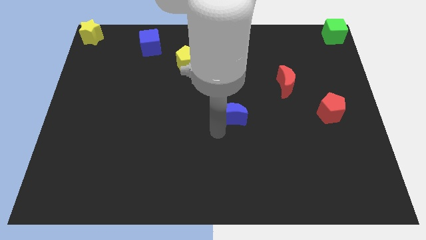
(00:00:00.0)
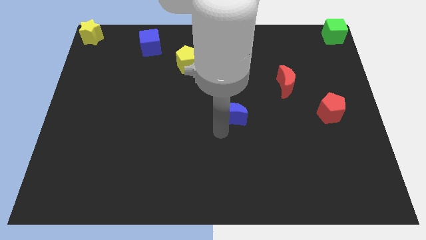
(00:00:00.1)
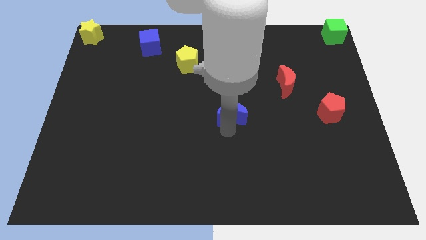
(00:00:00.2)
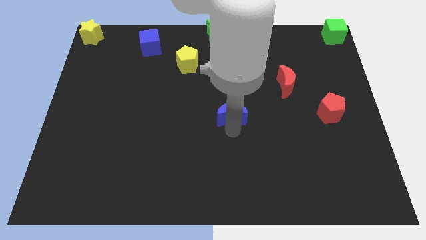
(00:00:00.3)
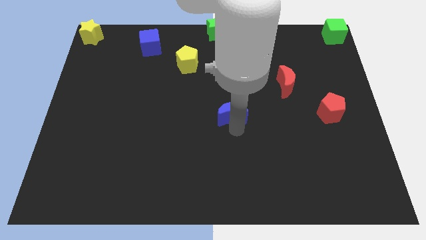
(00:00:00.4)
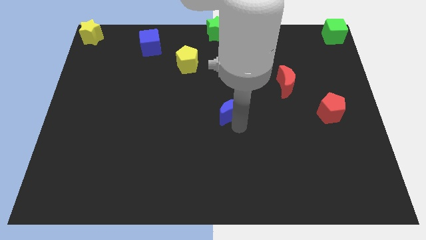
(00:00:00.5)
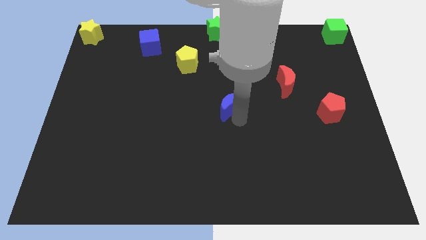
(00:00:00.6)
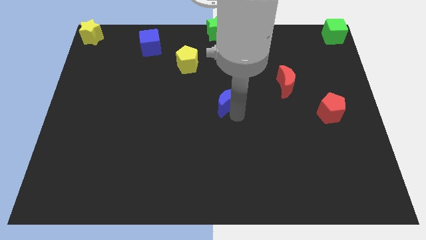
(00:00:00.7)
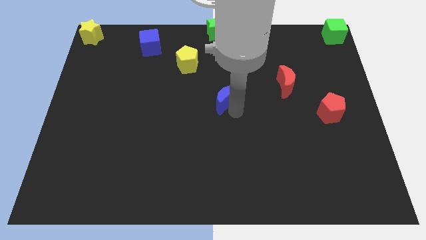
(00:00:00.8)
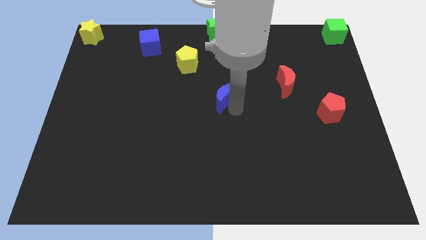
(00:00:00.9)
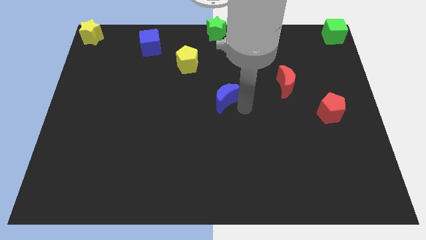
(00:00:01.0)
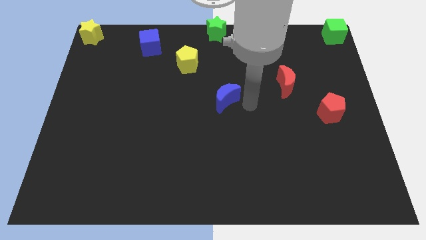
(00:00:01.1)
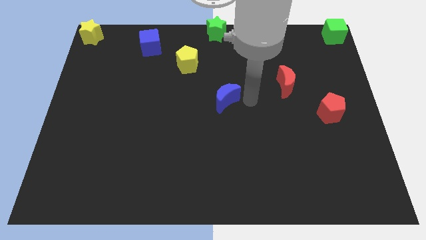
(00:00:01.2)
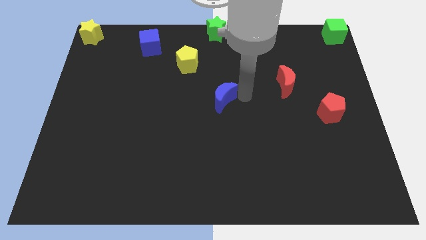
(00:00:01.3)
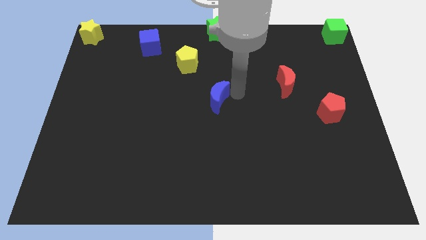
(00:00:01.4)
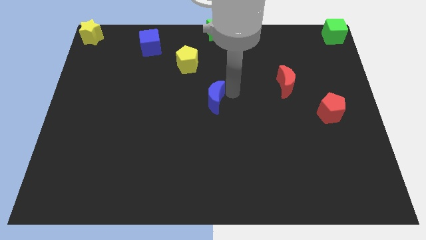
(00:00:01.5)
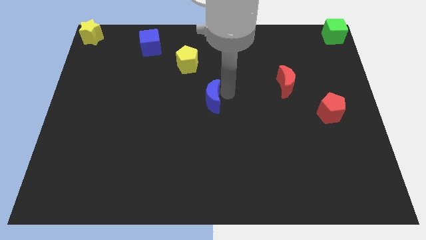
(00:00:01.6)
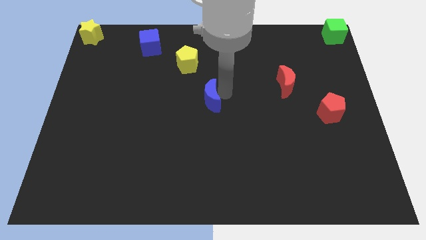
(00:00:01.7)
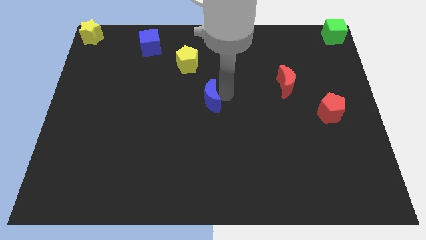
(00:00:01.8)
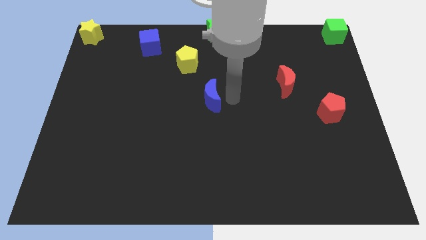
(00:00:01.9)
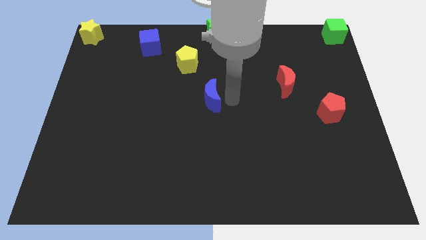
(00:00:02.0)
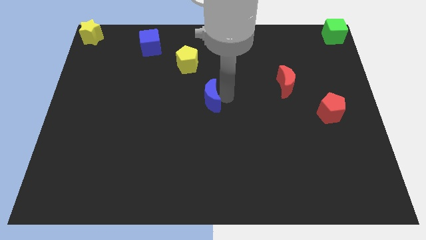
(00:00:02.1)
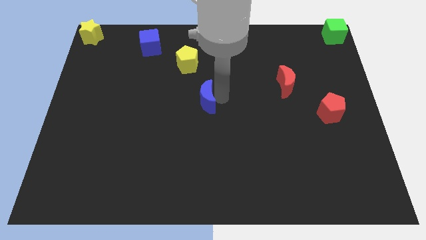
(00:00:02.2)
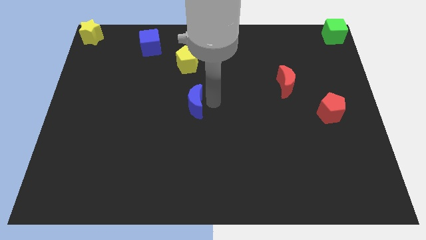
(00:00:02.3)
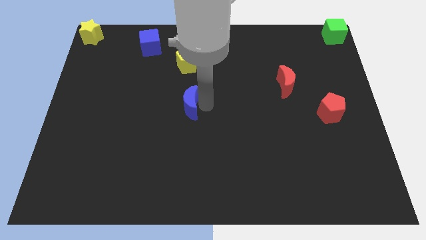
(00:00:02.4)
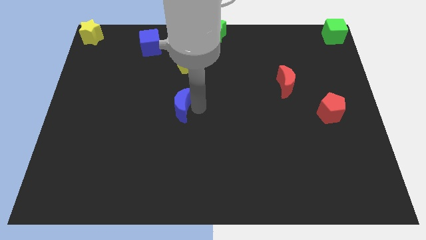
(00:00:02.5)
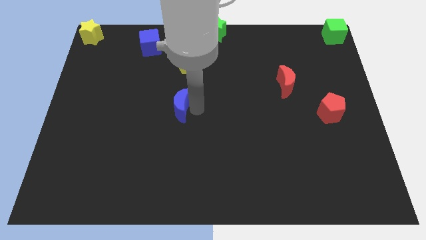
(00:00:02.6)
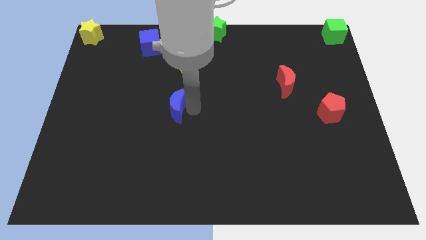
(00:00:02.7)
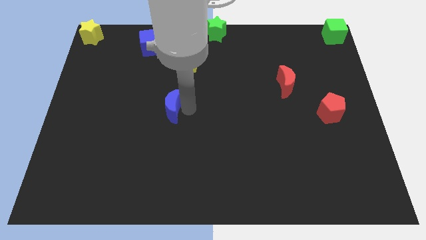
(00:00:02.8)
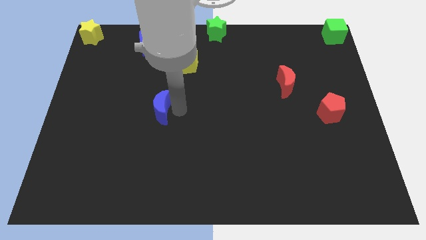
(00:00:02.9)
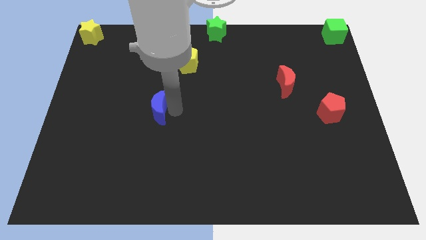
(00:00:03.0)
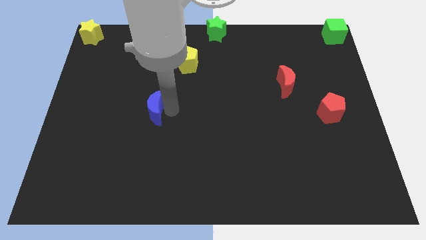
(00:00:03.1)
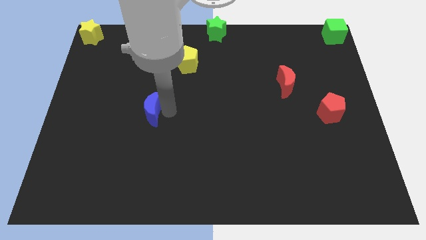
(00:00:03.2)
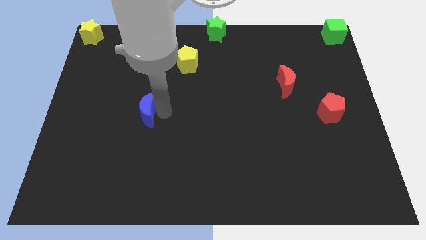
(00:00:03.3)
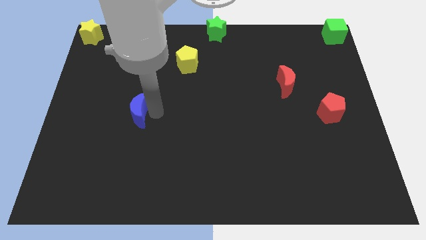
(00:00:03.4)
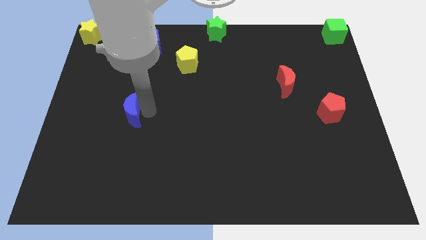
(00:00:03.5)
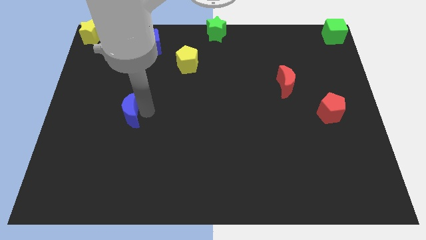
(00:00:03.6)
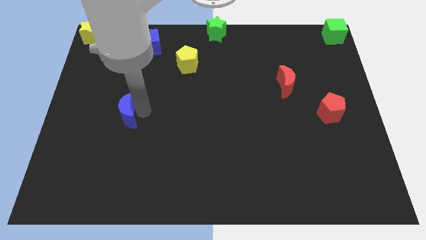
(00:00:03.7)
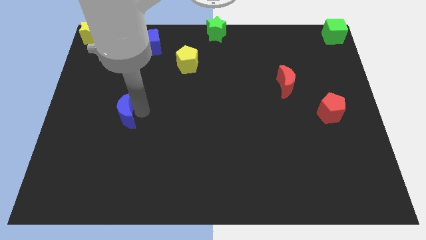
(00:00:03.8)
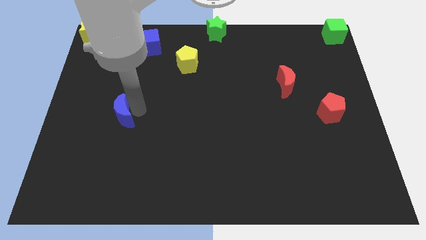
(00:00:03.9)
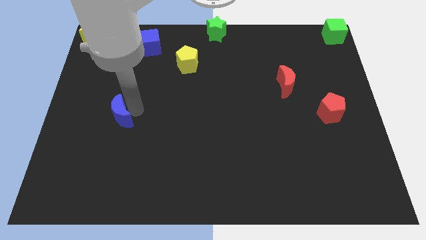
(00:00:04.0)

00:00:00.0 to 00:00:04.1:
push blue crescent to the left side

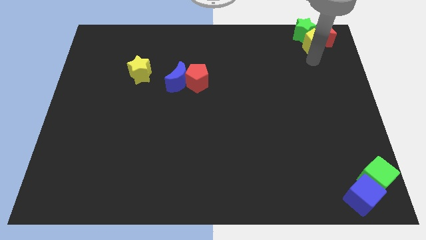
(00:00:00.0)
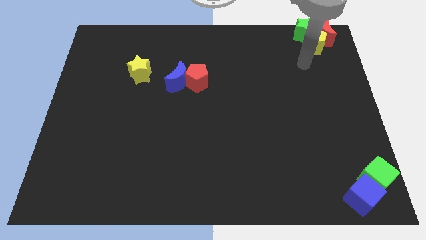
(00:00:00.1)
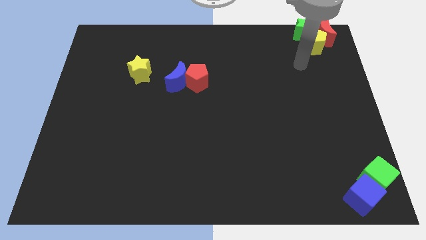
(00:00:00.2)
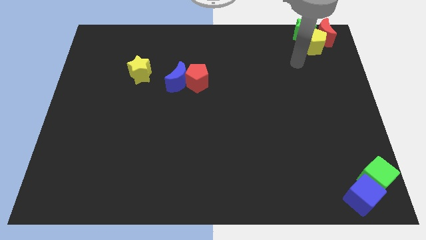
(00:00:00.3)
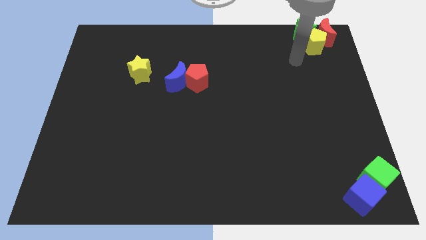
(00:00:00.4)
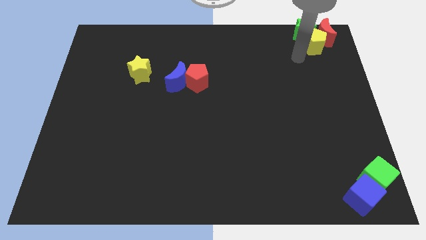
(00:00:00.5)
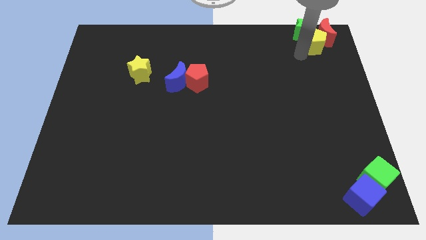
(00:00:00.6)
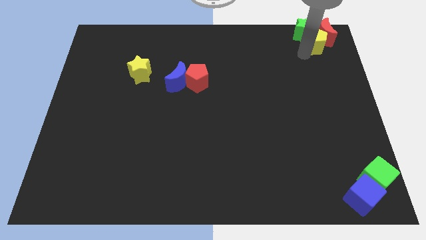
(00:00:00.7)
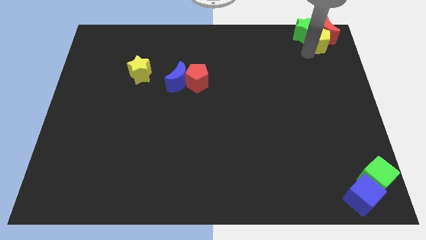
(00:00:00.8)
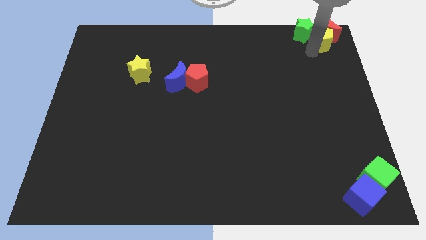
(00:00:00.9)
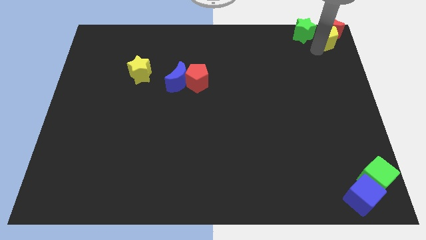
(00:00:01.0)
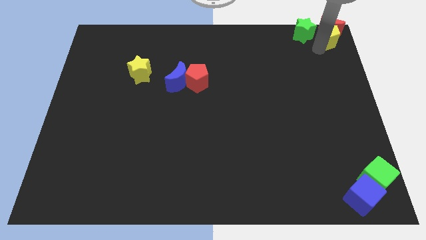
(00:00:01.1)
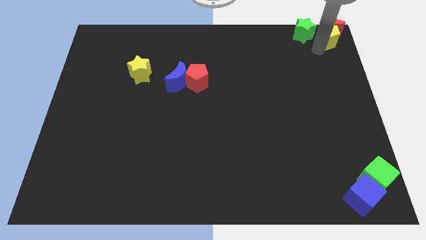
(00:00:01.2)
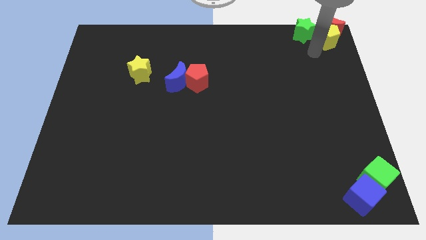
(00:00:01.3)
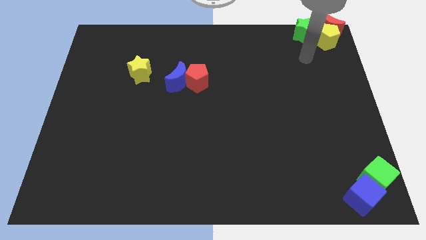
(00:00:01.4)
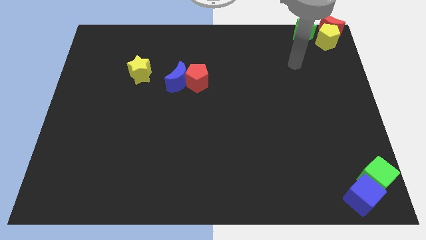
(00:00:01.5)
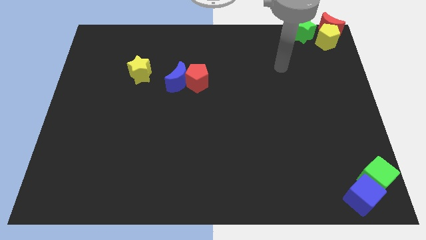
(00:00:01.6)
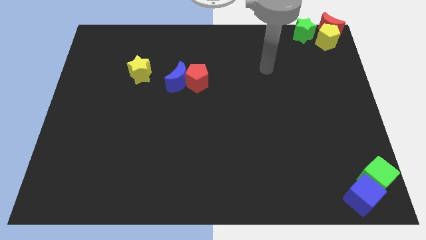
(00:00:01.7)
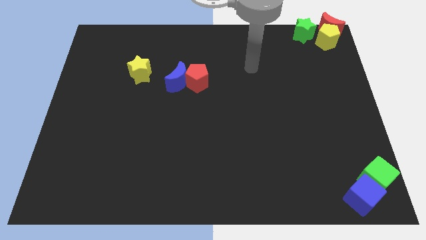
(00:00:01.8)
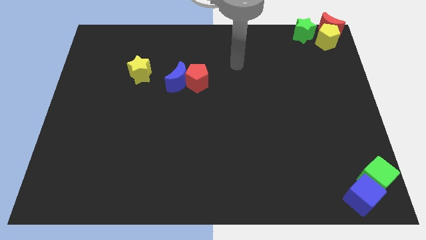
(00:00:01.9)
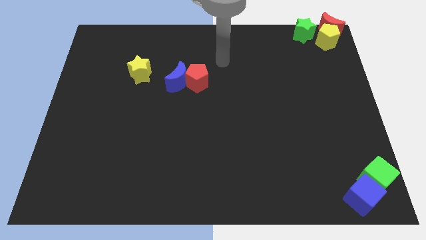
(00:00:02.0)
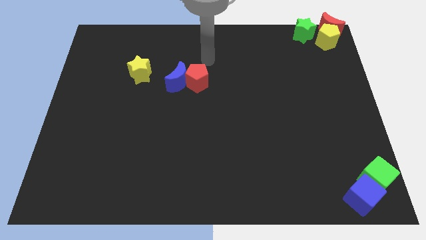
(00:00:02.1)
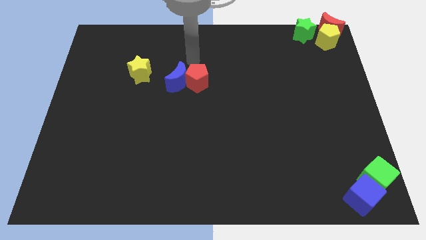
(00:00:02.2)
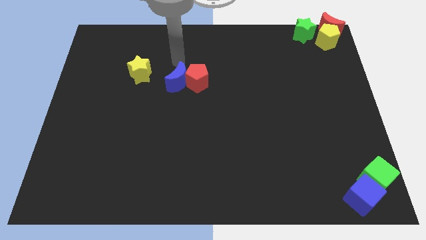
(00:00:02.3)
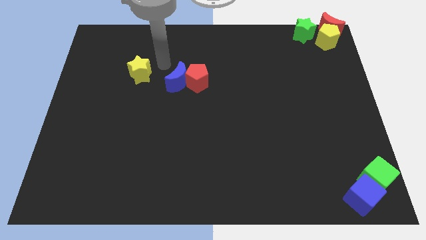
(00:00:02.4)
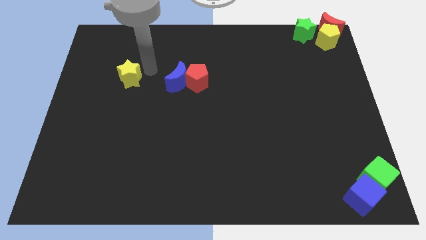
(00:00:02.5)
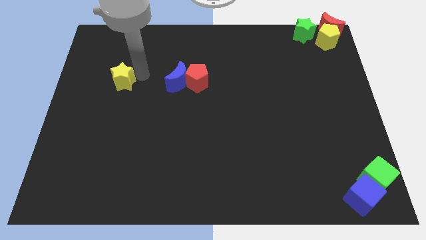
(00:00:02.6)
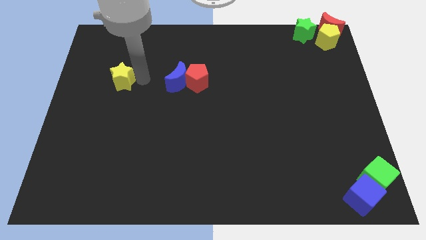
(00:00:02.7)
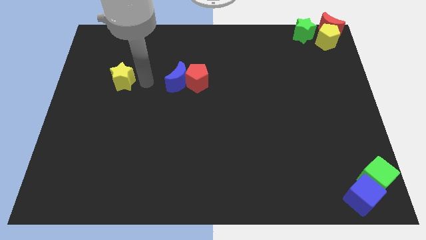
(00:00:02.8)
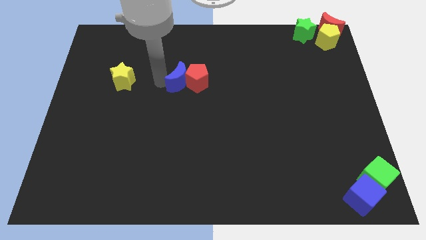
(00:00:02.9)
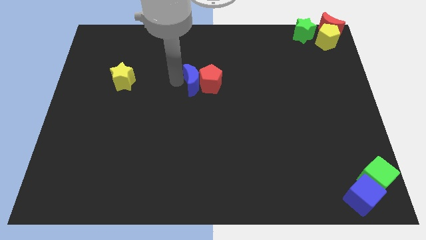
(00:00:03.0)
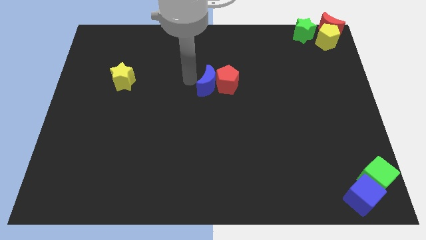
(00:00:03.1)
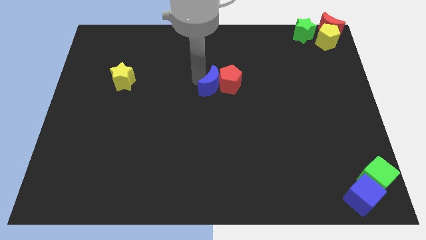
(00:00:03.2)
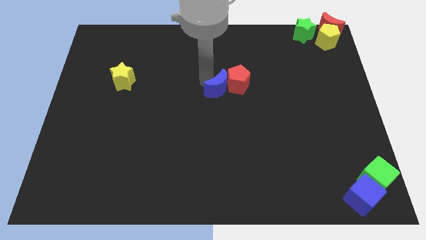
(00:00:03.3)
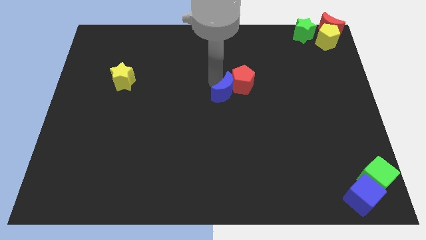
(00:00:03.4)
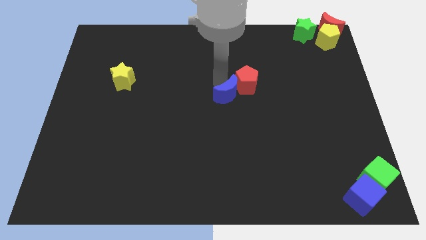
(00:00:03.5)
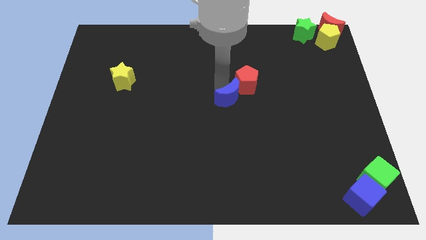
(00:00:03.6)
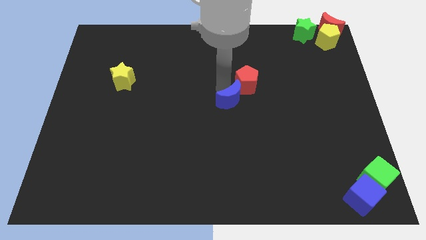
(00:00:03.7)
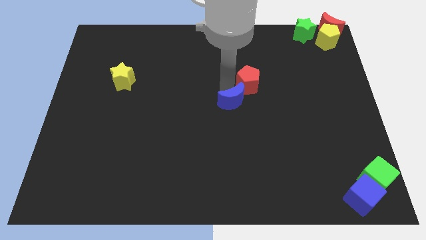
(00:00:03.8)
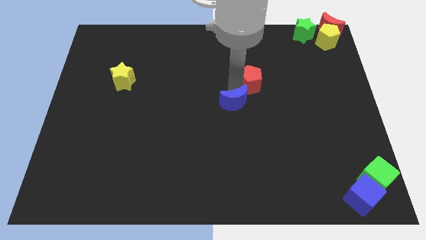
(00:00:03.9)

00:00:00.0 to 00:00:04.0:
push the blue crescent along with the red pentagon to the right side of the board

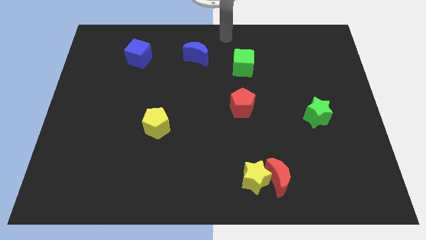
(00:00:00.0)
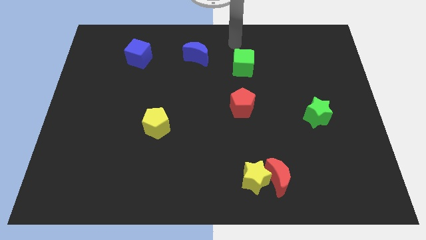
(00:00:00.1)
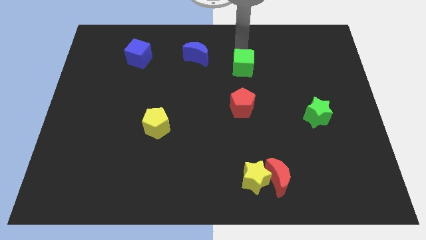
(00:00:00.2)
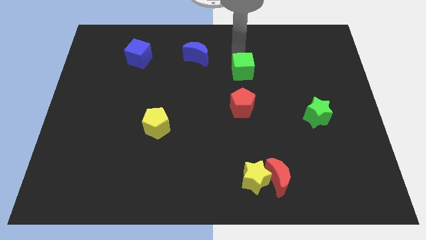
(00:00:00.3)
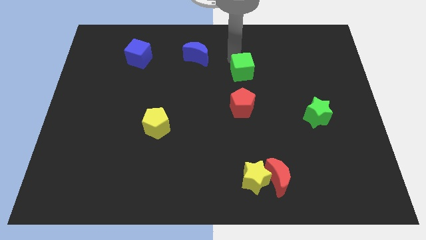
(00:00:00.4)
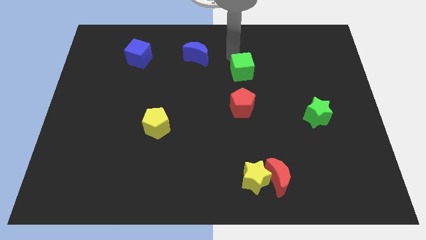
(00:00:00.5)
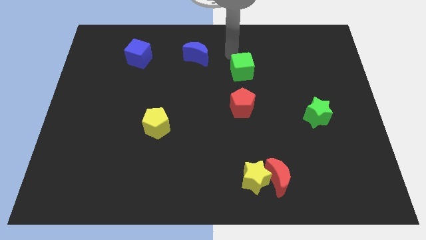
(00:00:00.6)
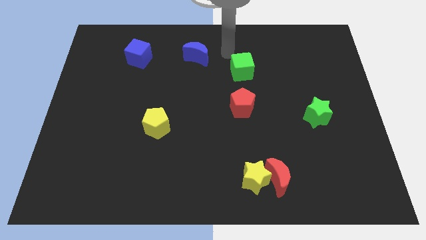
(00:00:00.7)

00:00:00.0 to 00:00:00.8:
touch green cube slightly on its top
